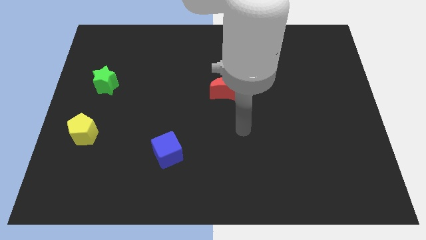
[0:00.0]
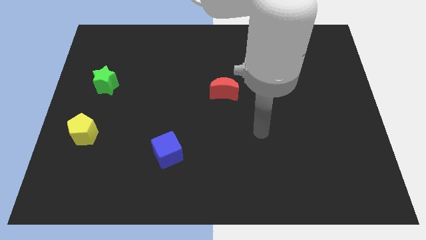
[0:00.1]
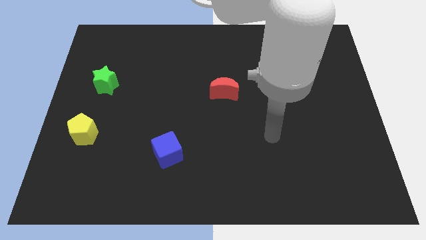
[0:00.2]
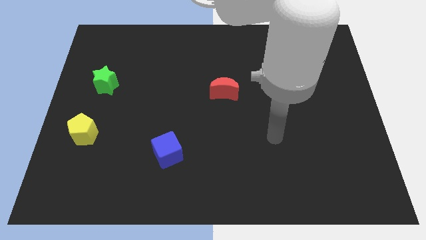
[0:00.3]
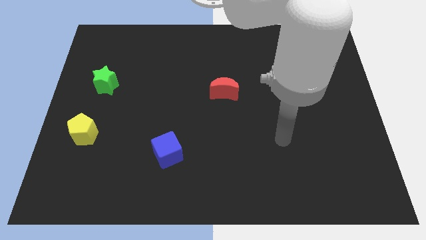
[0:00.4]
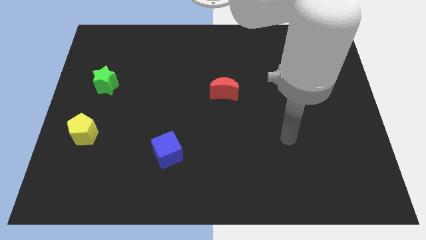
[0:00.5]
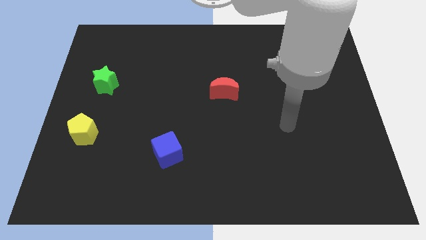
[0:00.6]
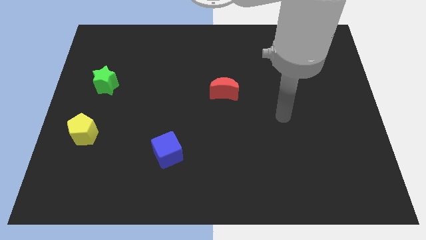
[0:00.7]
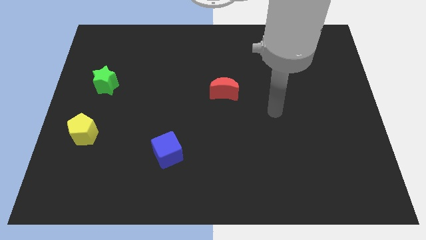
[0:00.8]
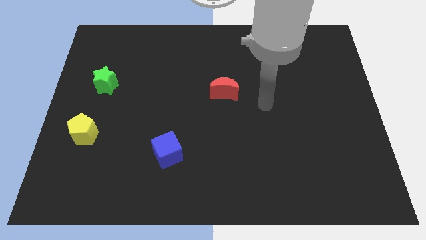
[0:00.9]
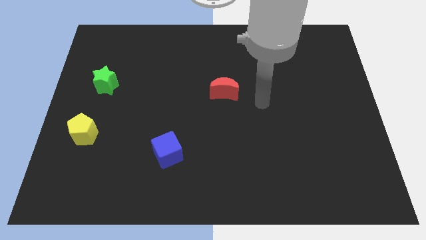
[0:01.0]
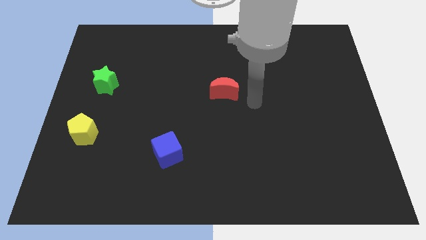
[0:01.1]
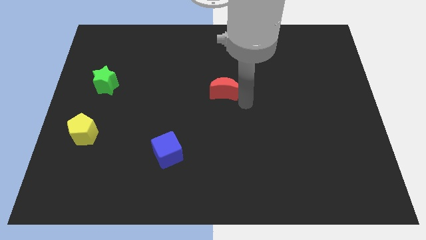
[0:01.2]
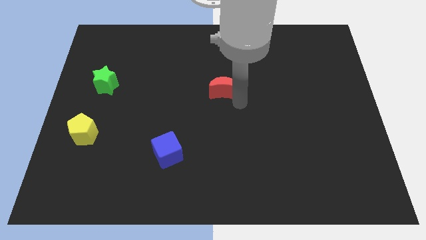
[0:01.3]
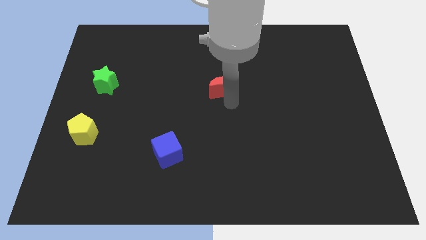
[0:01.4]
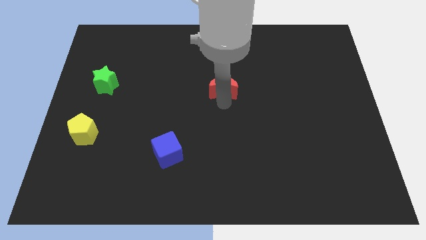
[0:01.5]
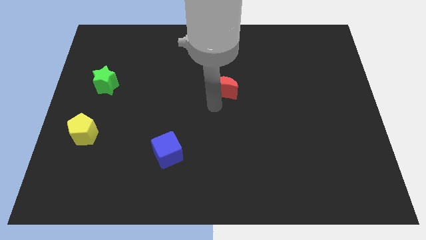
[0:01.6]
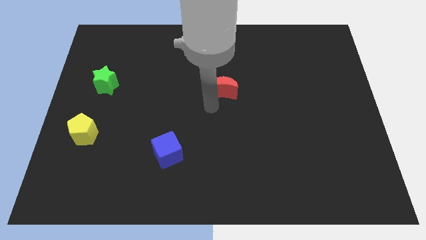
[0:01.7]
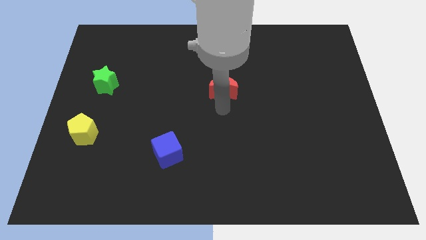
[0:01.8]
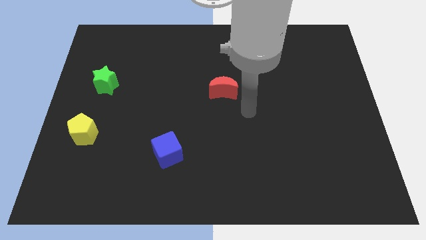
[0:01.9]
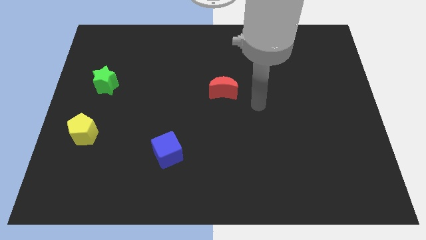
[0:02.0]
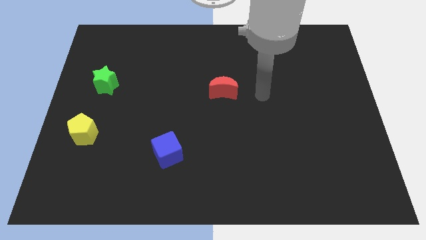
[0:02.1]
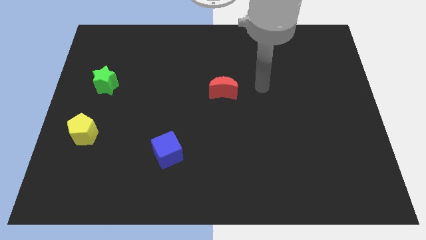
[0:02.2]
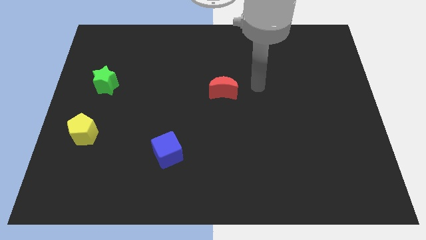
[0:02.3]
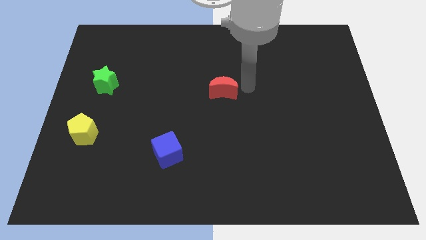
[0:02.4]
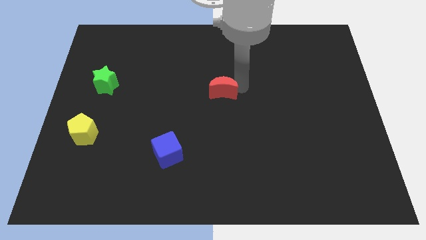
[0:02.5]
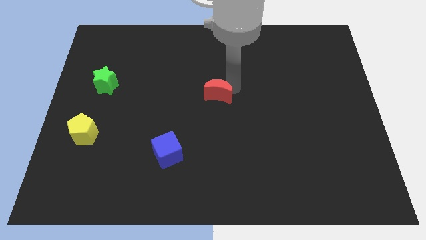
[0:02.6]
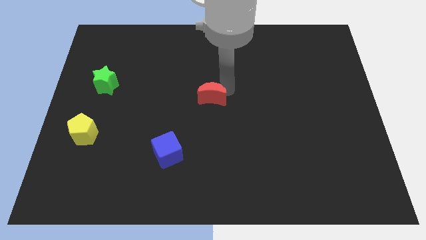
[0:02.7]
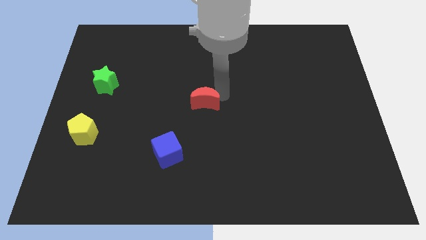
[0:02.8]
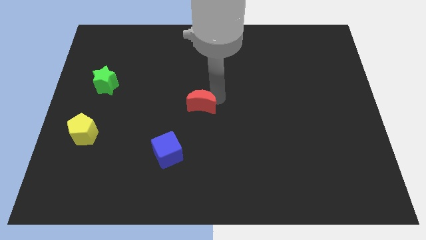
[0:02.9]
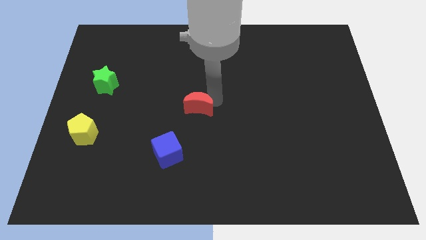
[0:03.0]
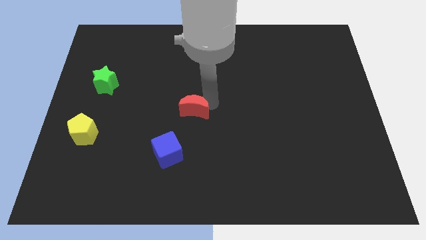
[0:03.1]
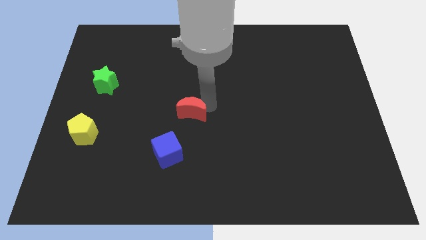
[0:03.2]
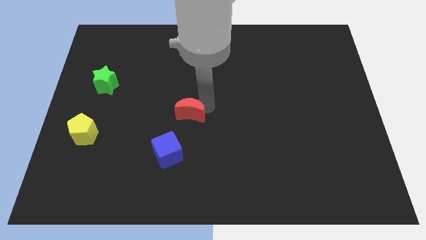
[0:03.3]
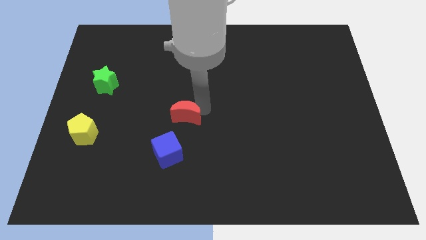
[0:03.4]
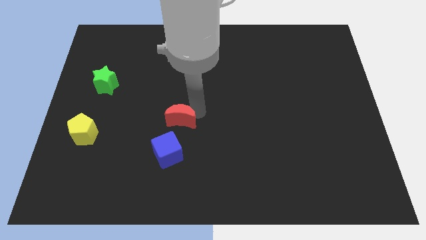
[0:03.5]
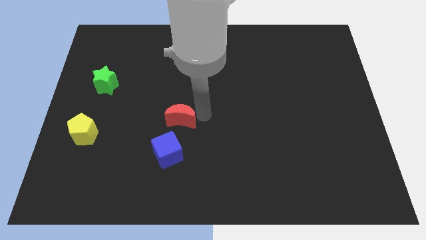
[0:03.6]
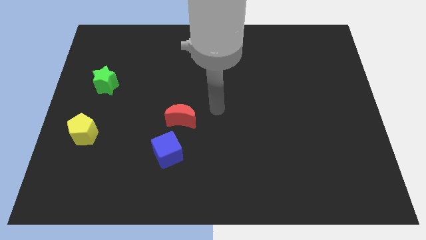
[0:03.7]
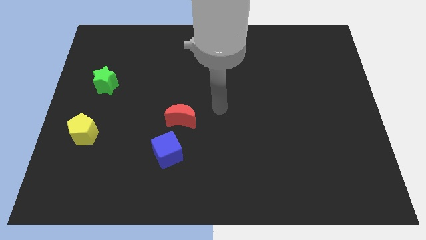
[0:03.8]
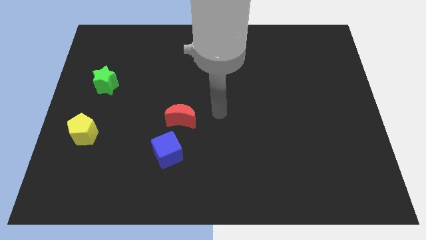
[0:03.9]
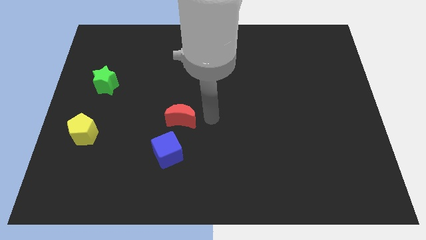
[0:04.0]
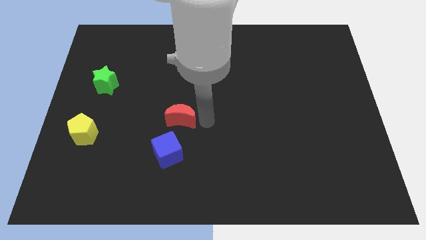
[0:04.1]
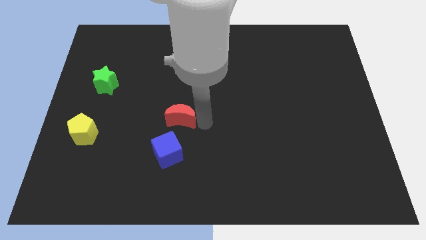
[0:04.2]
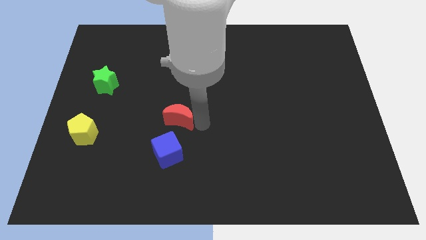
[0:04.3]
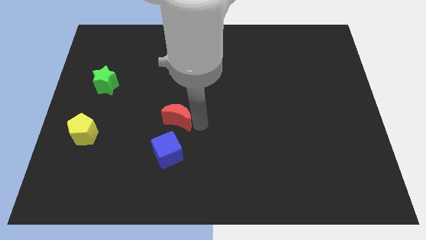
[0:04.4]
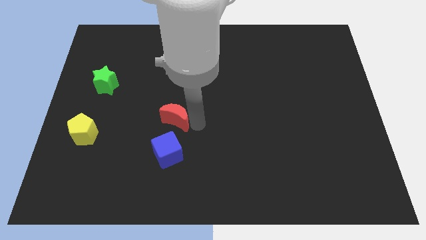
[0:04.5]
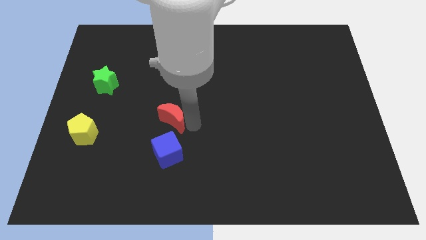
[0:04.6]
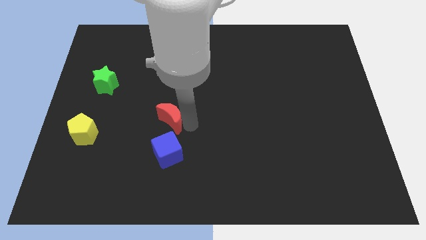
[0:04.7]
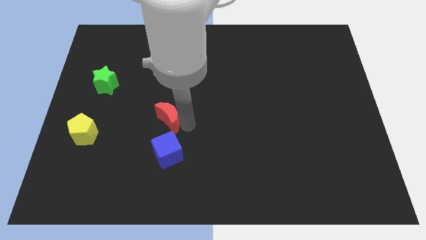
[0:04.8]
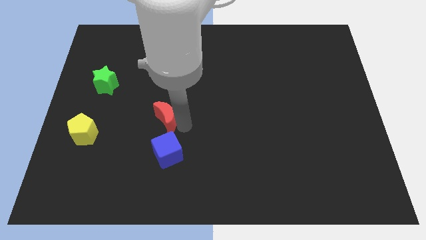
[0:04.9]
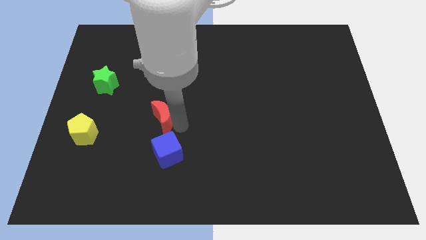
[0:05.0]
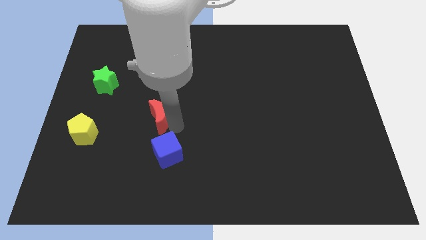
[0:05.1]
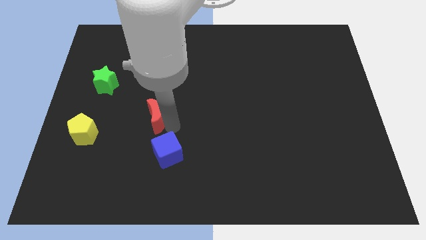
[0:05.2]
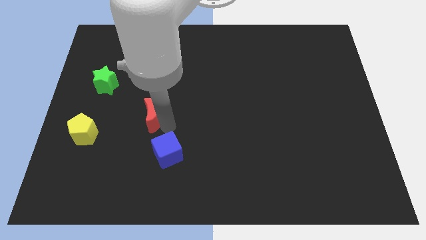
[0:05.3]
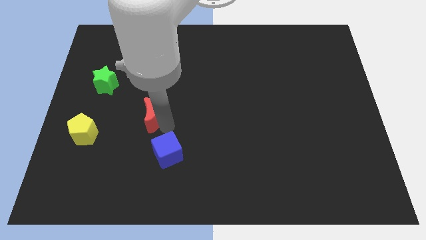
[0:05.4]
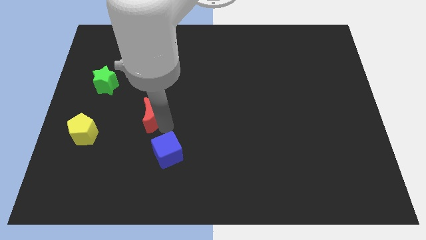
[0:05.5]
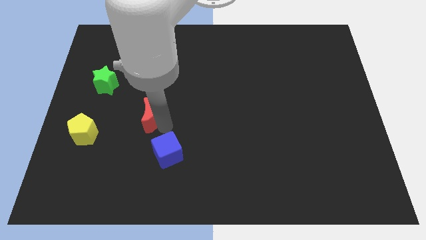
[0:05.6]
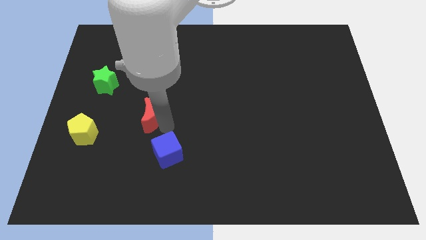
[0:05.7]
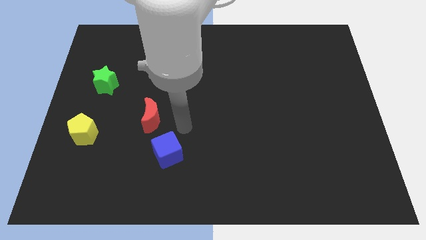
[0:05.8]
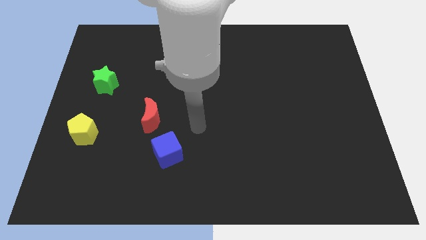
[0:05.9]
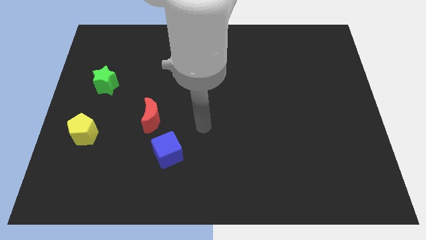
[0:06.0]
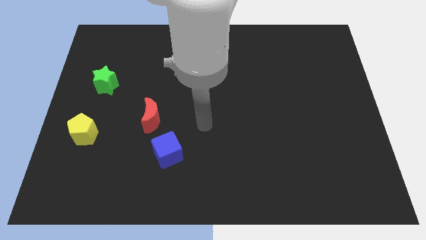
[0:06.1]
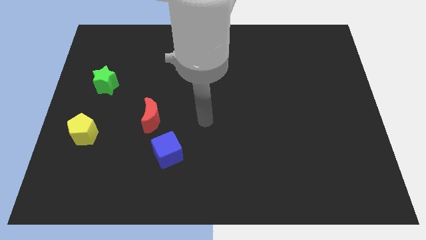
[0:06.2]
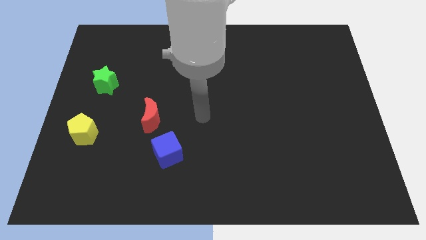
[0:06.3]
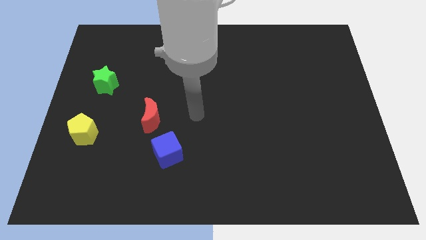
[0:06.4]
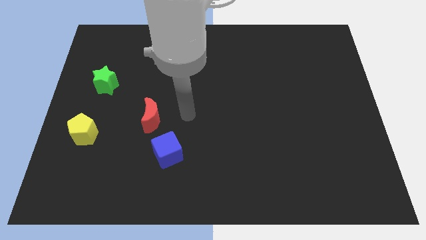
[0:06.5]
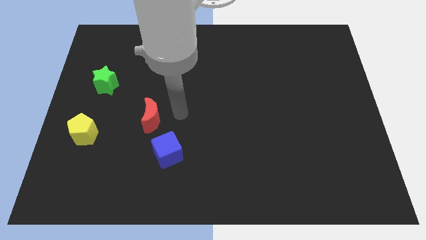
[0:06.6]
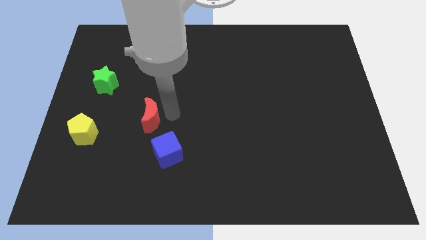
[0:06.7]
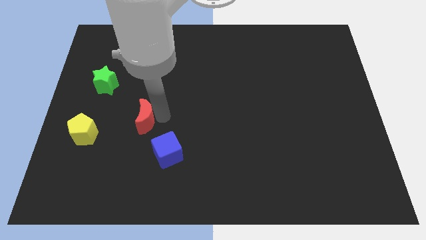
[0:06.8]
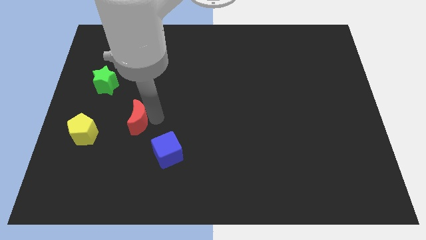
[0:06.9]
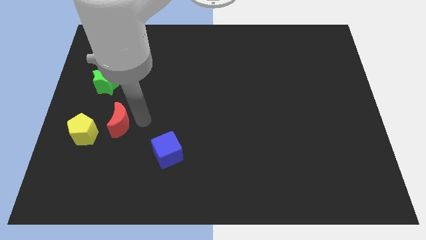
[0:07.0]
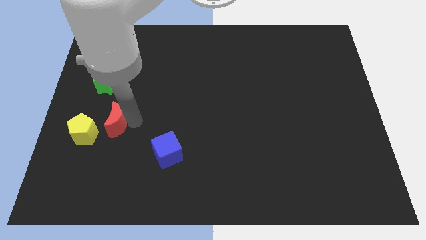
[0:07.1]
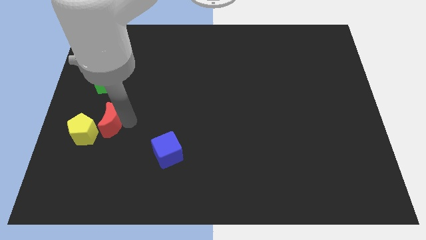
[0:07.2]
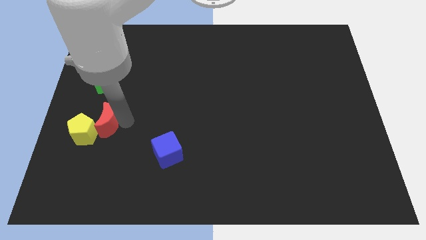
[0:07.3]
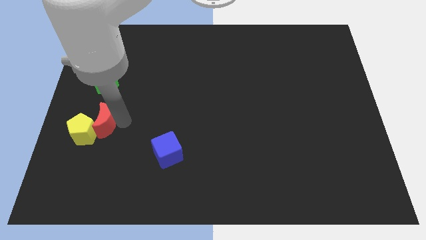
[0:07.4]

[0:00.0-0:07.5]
slide the red moon towards the yellow pentagon

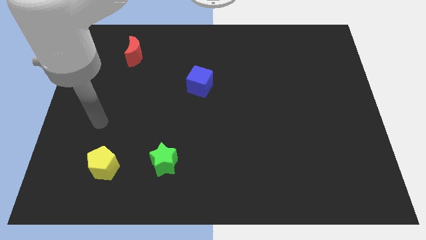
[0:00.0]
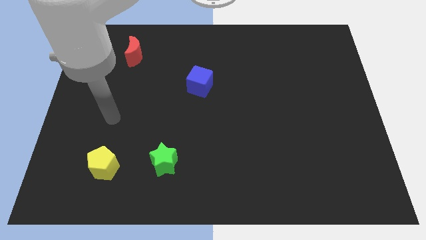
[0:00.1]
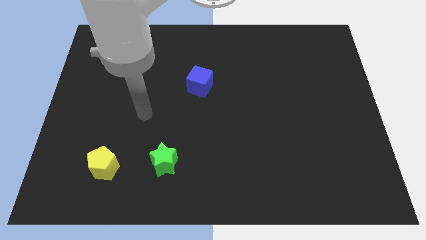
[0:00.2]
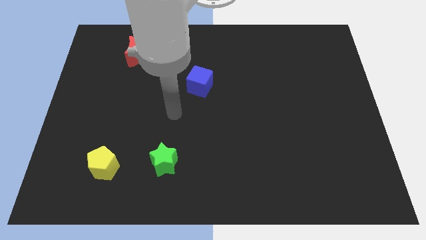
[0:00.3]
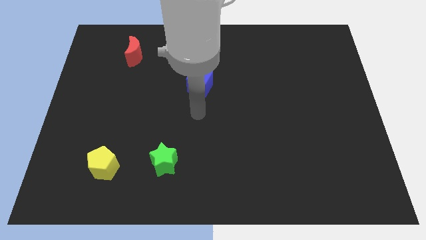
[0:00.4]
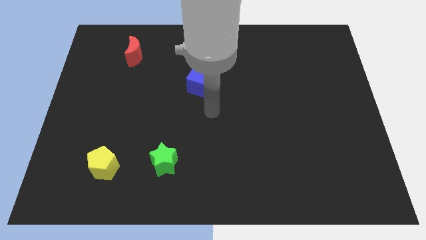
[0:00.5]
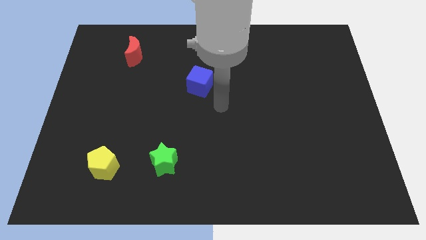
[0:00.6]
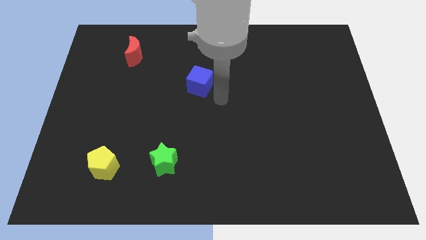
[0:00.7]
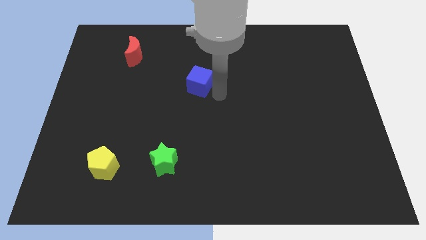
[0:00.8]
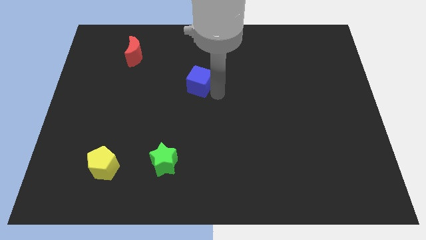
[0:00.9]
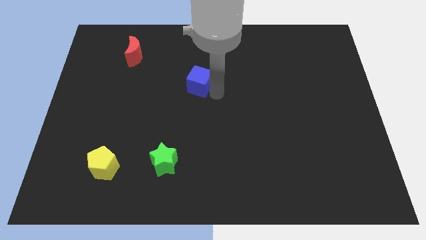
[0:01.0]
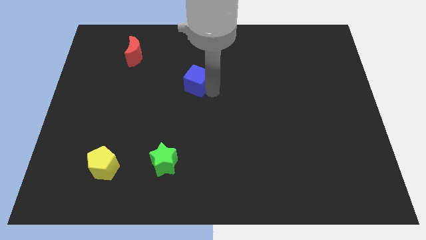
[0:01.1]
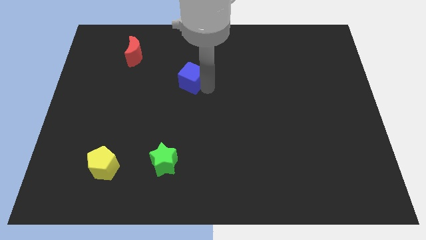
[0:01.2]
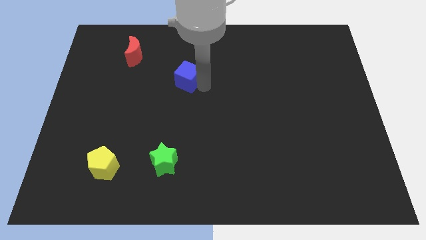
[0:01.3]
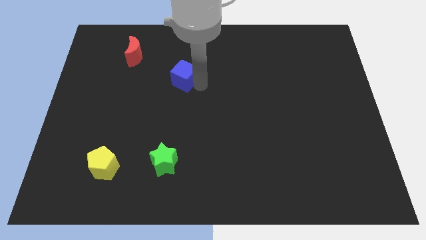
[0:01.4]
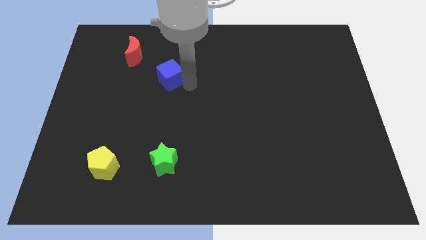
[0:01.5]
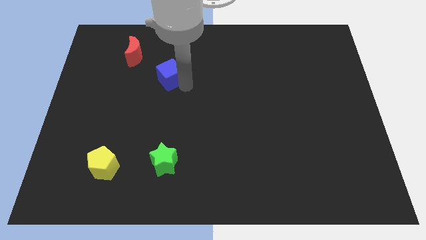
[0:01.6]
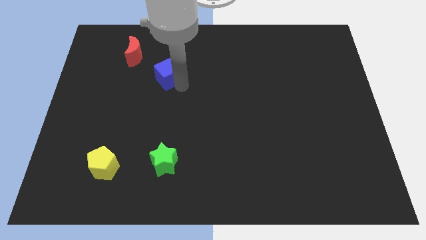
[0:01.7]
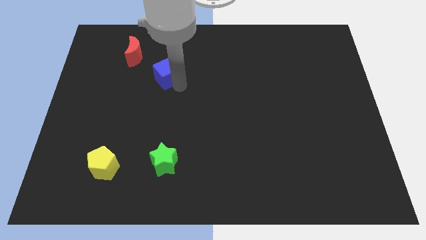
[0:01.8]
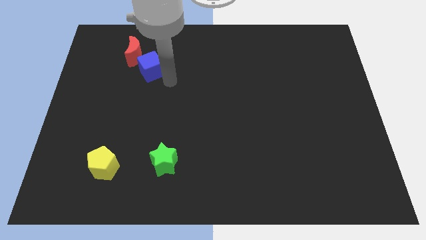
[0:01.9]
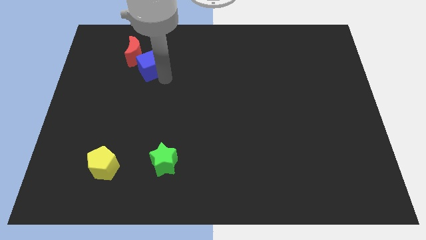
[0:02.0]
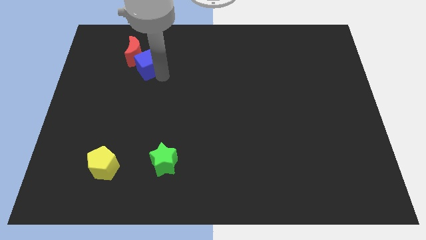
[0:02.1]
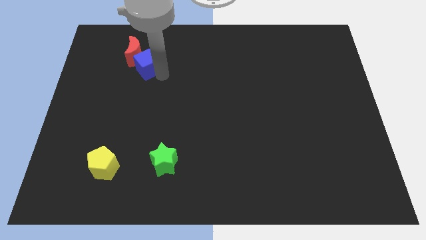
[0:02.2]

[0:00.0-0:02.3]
push the cube next to the moon
